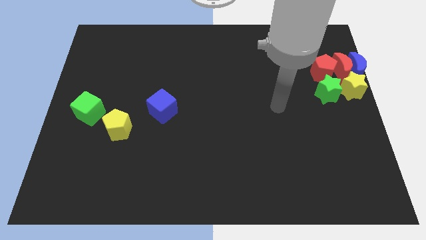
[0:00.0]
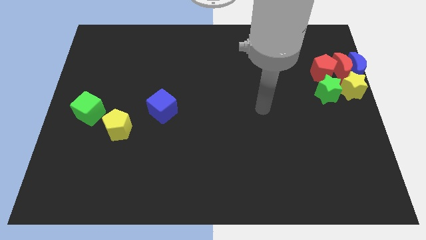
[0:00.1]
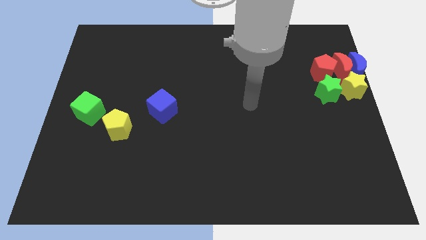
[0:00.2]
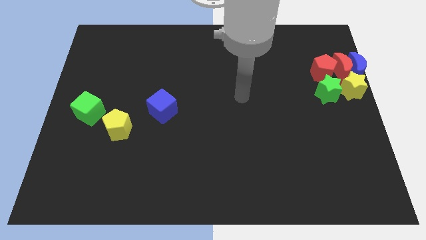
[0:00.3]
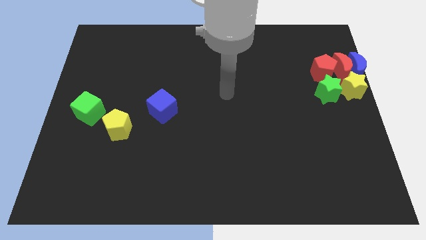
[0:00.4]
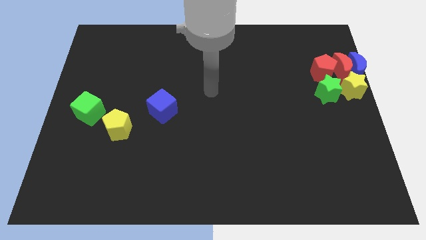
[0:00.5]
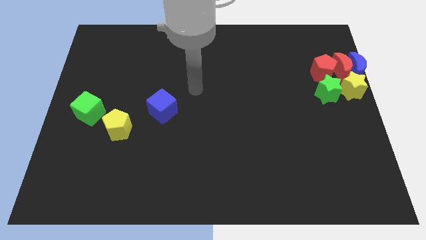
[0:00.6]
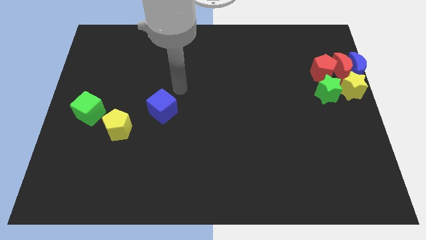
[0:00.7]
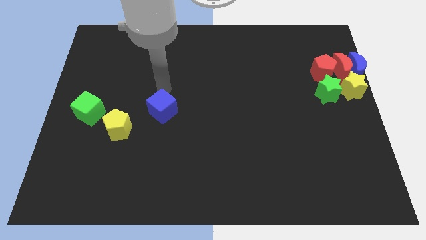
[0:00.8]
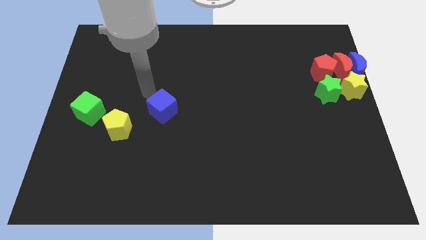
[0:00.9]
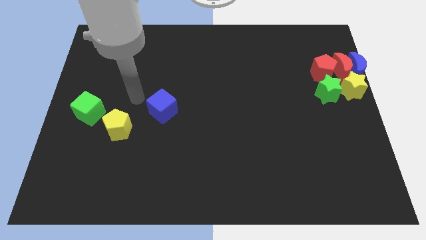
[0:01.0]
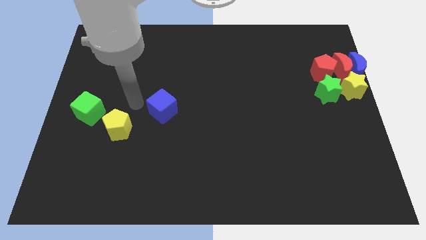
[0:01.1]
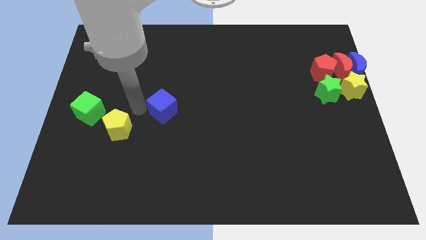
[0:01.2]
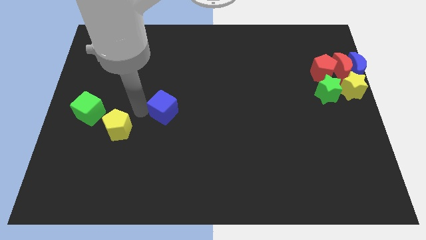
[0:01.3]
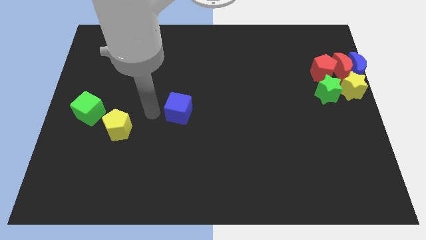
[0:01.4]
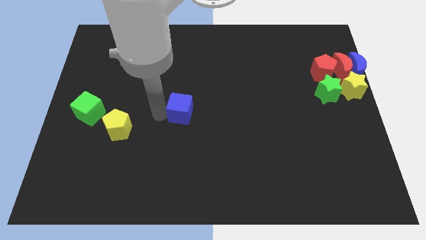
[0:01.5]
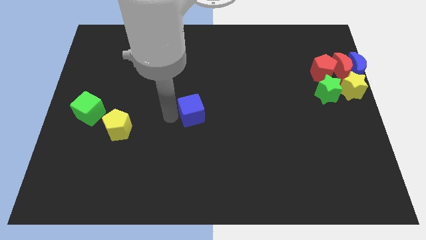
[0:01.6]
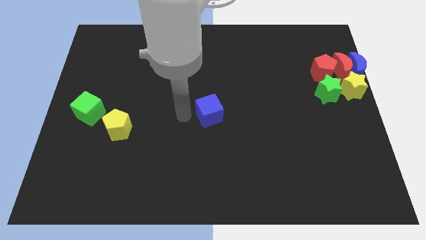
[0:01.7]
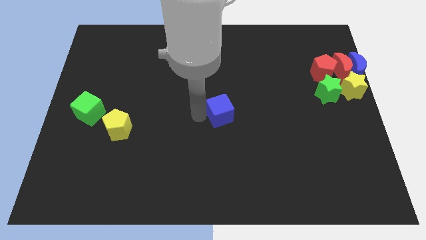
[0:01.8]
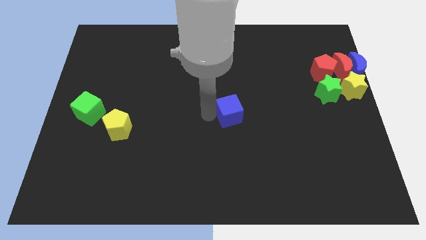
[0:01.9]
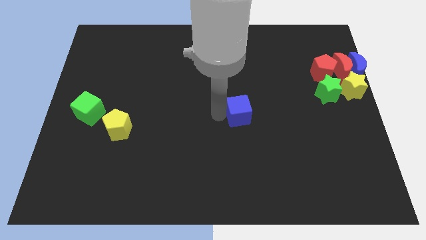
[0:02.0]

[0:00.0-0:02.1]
move blue cube to the center

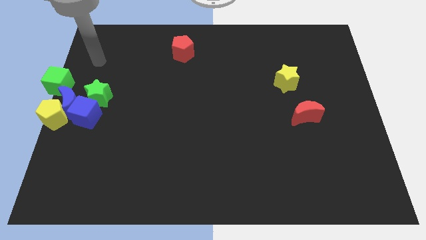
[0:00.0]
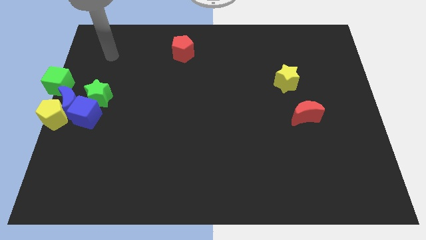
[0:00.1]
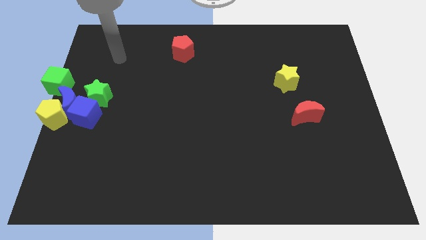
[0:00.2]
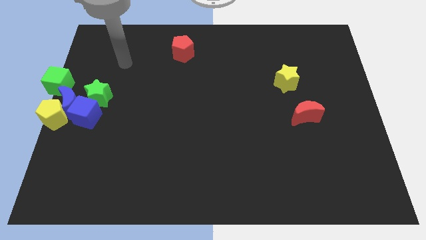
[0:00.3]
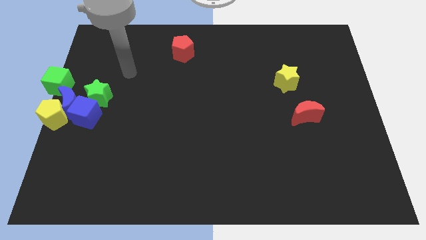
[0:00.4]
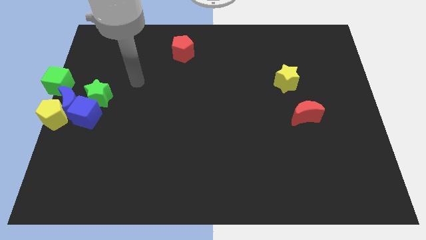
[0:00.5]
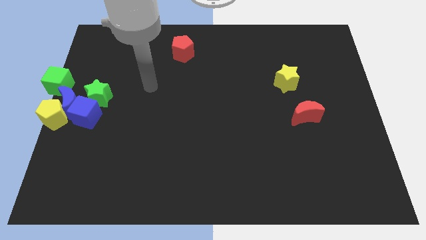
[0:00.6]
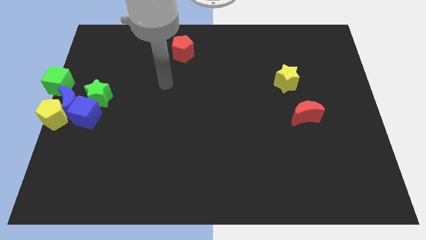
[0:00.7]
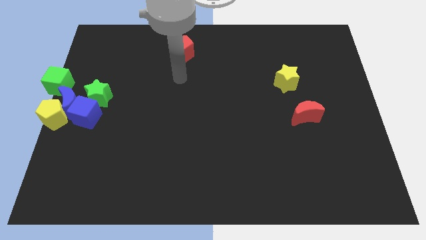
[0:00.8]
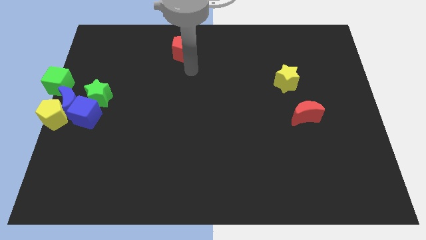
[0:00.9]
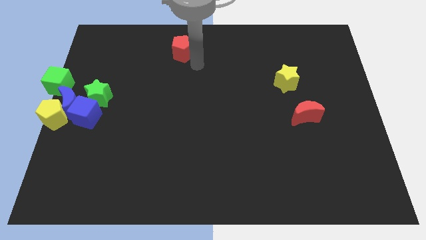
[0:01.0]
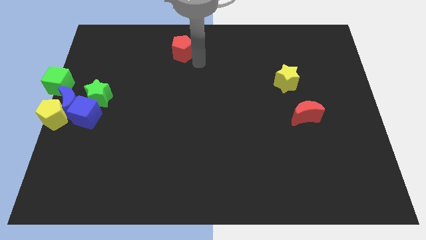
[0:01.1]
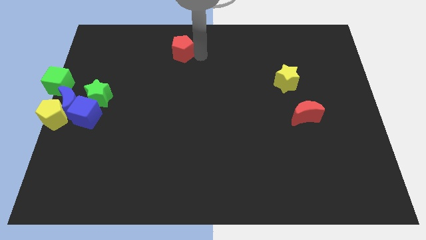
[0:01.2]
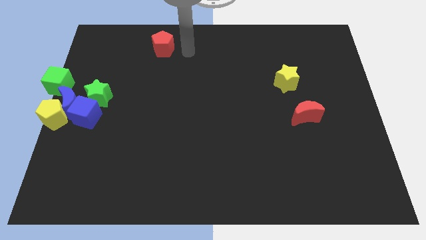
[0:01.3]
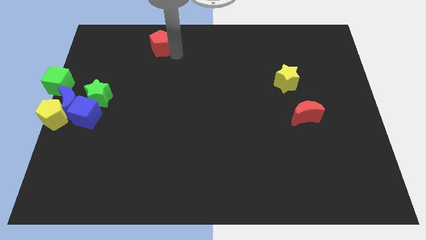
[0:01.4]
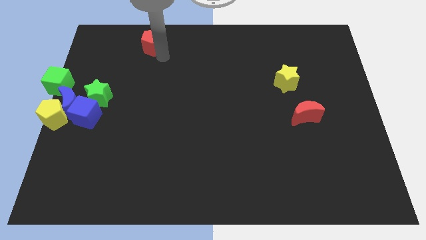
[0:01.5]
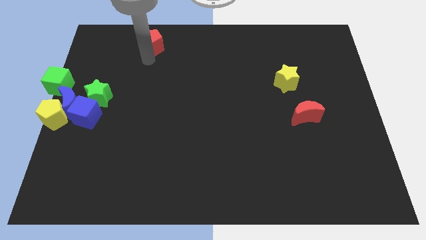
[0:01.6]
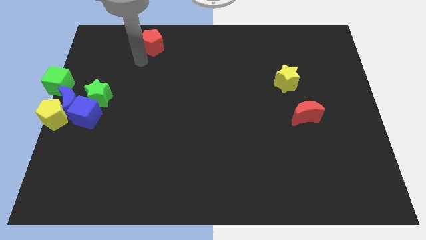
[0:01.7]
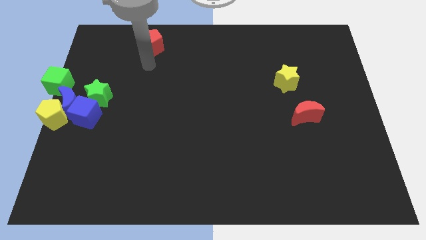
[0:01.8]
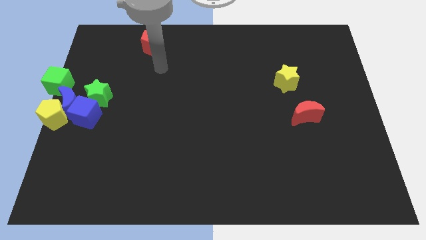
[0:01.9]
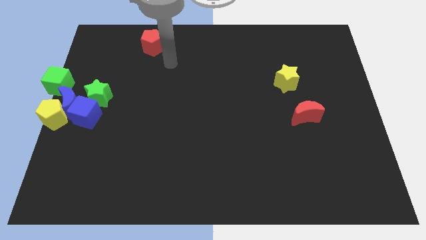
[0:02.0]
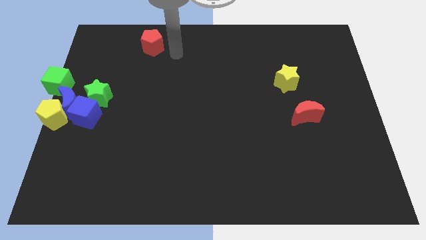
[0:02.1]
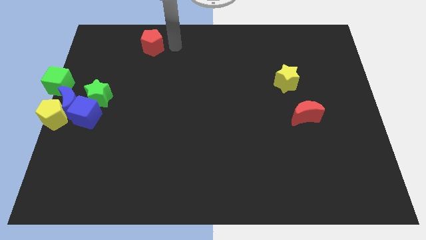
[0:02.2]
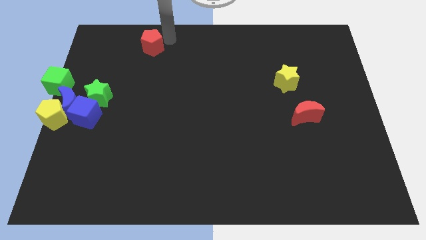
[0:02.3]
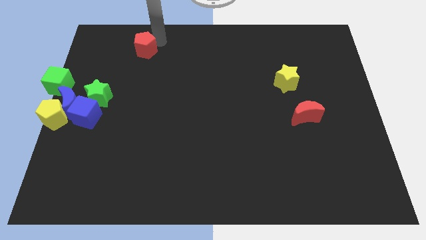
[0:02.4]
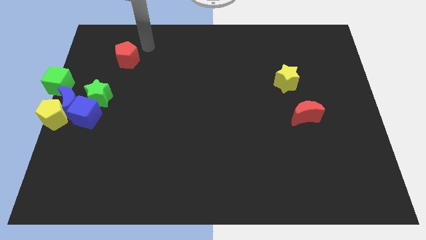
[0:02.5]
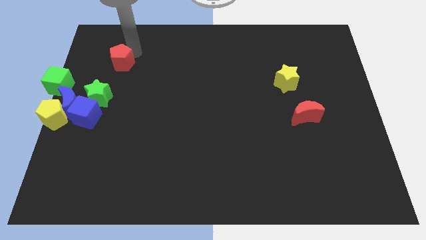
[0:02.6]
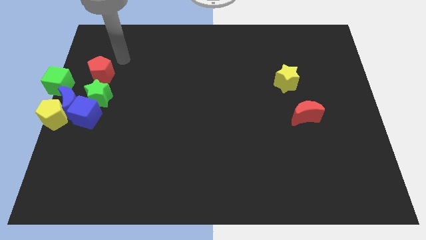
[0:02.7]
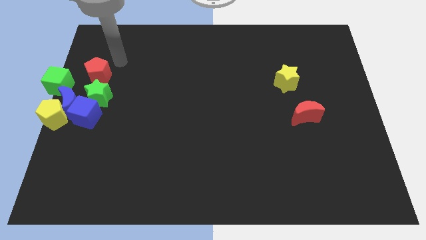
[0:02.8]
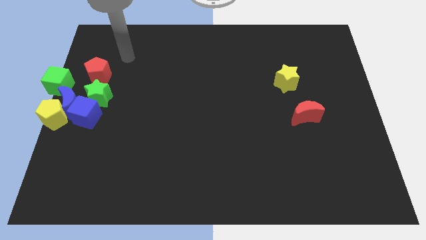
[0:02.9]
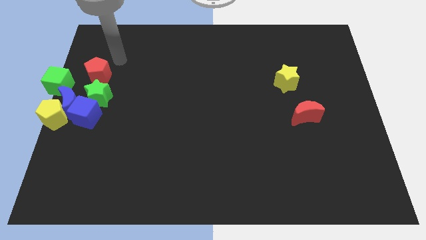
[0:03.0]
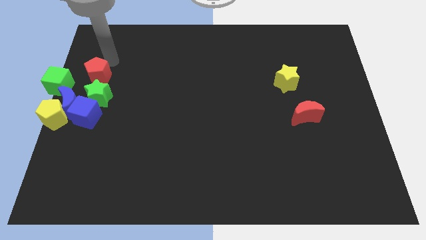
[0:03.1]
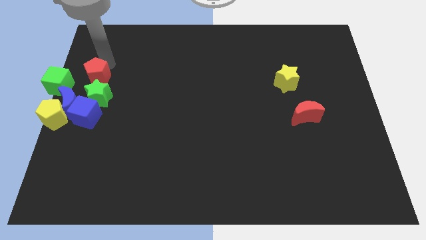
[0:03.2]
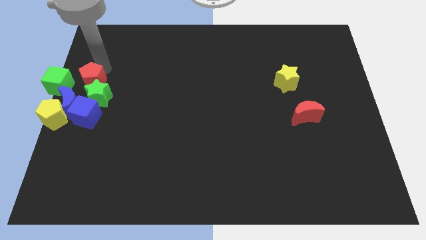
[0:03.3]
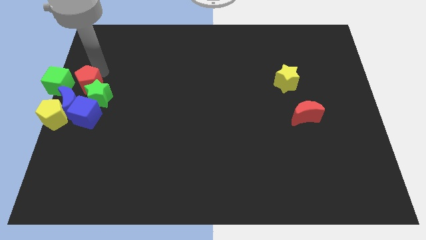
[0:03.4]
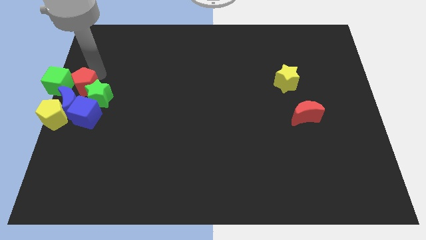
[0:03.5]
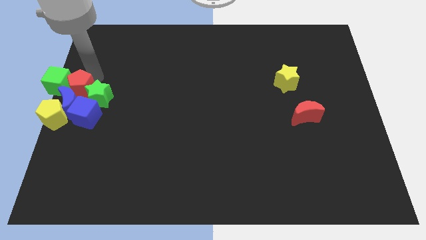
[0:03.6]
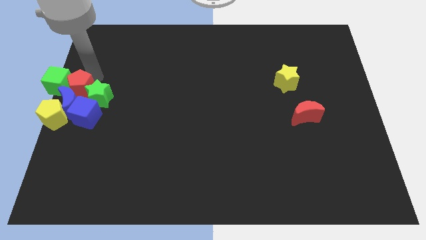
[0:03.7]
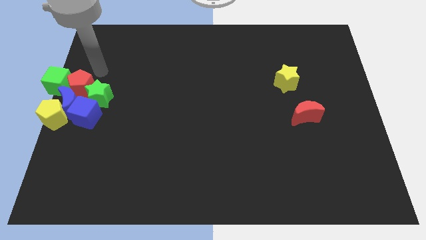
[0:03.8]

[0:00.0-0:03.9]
move the red crescent in between the green cube and green star

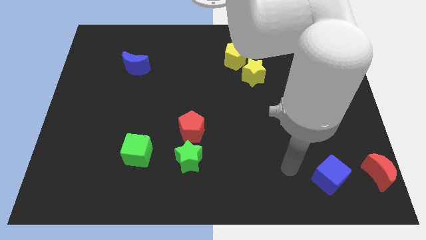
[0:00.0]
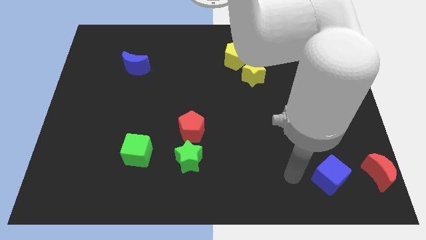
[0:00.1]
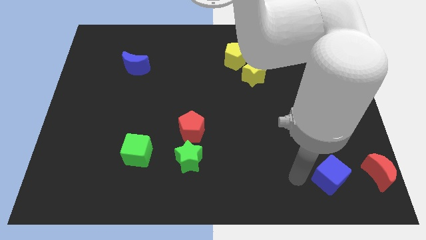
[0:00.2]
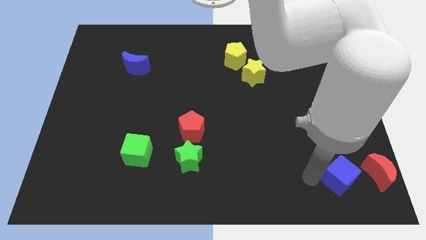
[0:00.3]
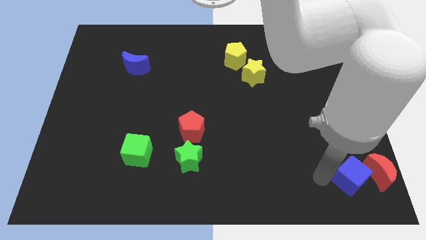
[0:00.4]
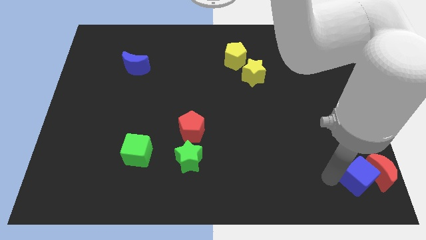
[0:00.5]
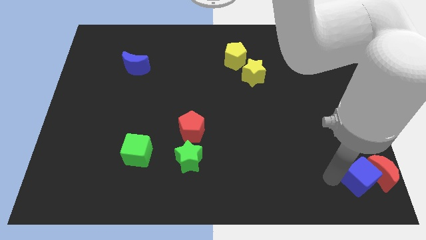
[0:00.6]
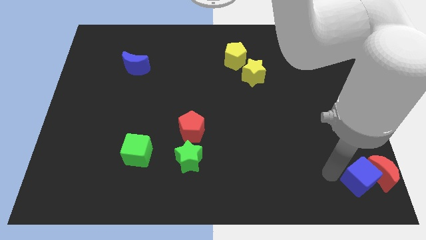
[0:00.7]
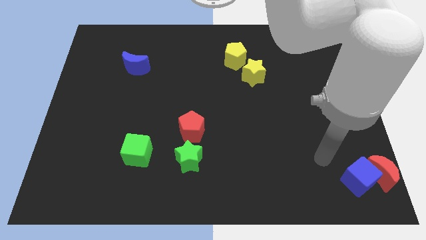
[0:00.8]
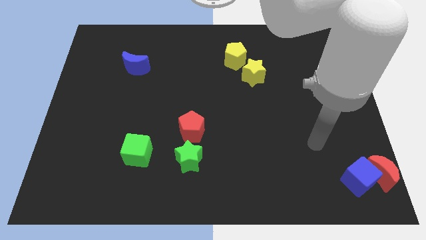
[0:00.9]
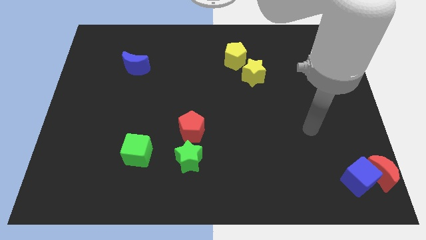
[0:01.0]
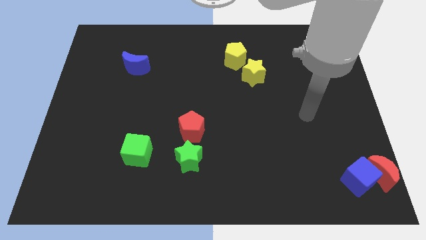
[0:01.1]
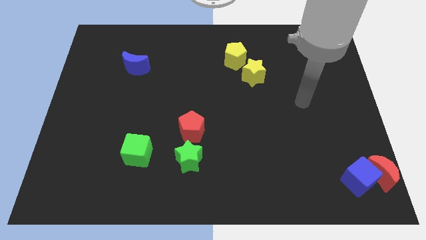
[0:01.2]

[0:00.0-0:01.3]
slide the blue cube into the red crescent

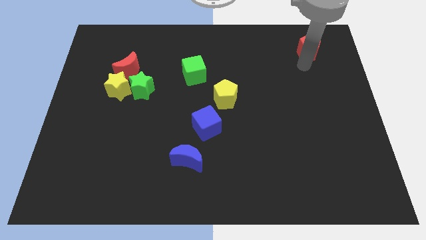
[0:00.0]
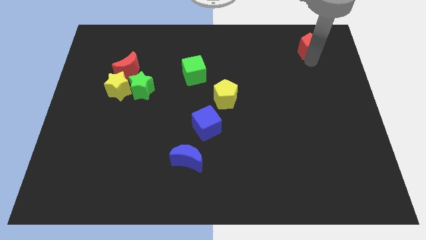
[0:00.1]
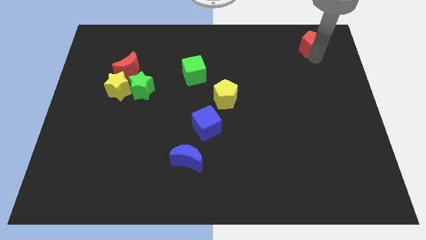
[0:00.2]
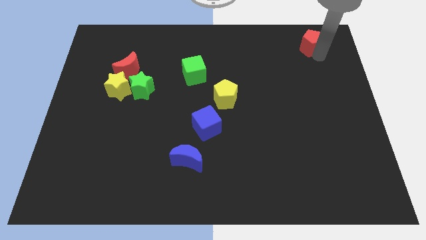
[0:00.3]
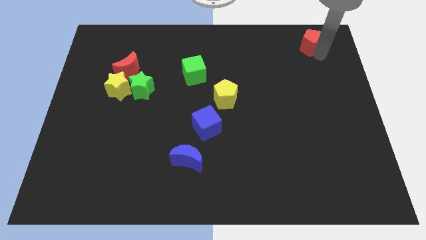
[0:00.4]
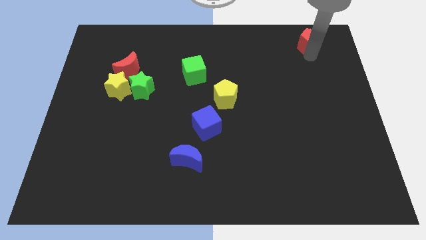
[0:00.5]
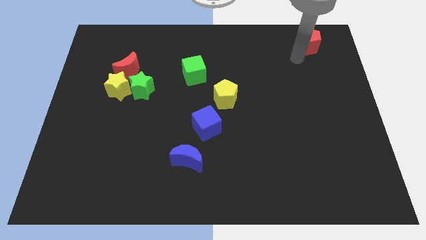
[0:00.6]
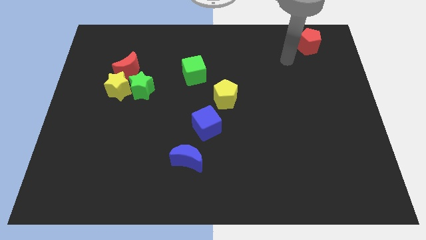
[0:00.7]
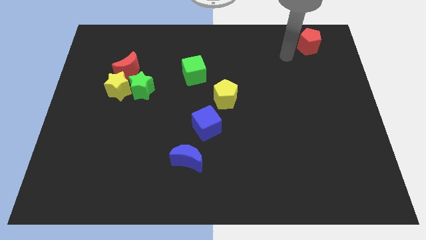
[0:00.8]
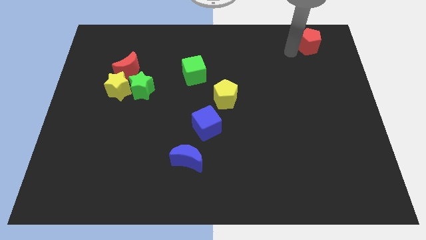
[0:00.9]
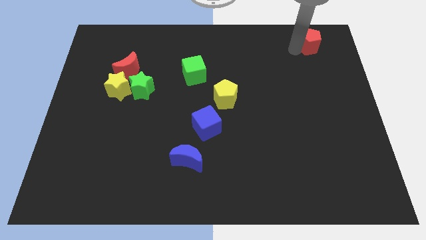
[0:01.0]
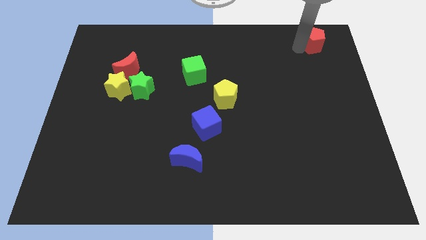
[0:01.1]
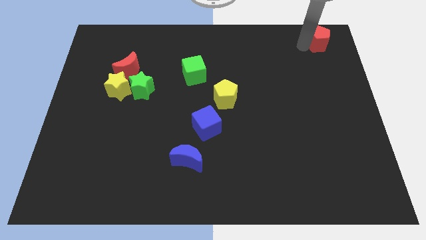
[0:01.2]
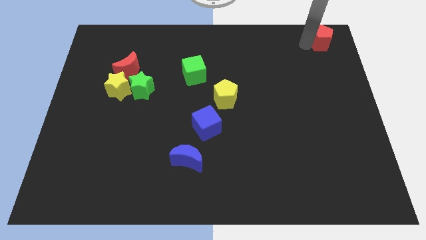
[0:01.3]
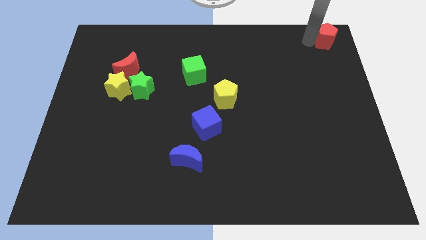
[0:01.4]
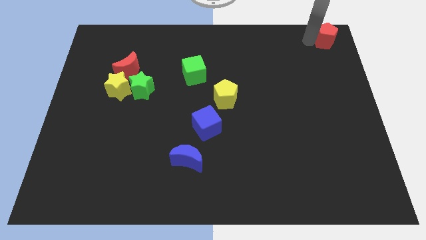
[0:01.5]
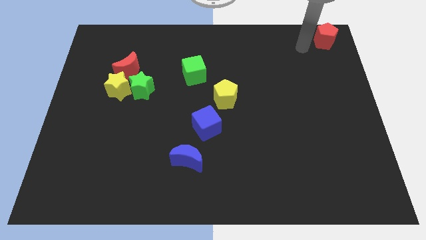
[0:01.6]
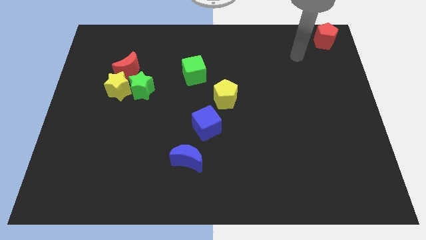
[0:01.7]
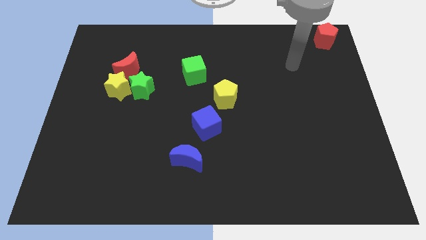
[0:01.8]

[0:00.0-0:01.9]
place red pentagon to the top right of the board
